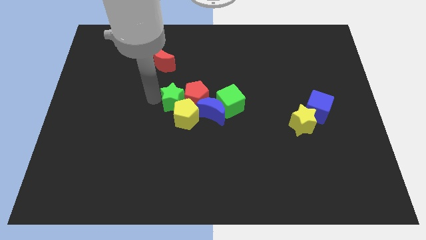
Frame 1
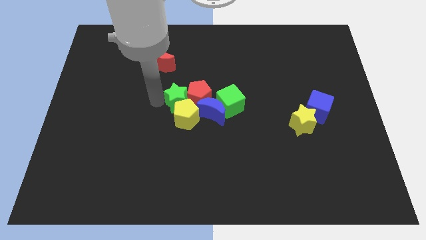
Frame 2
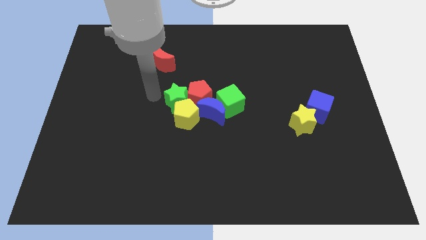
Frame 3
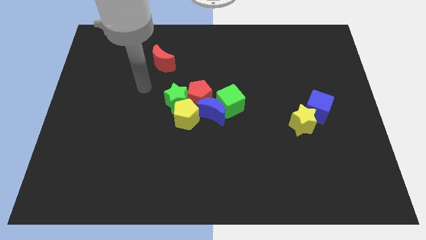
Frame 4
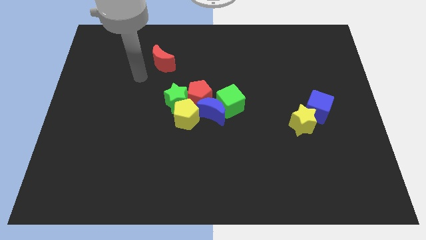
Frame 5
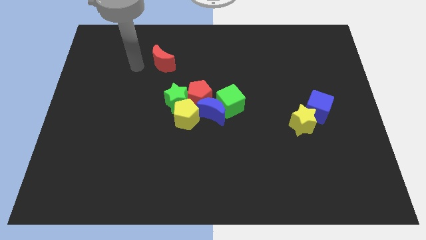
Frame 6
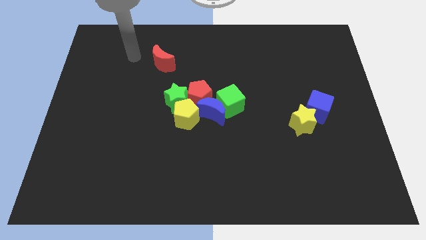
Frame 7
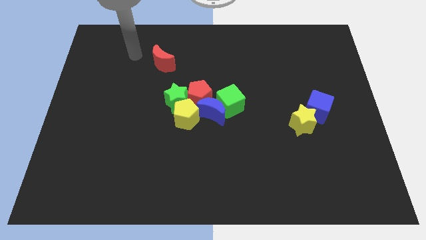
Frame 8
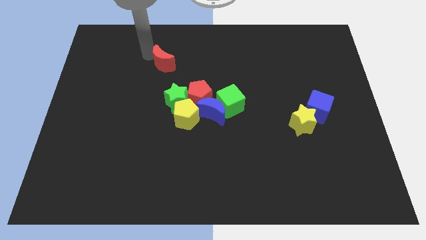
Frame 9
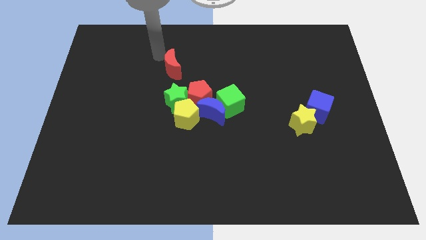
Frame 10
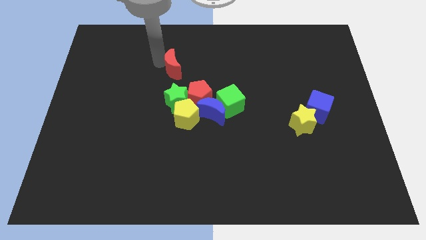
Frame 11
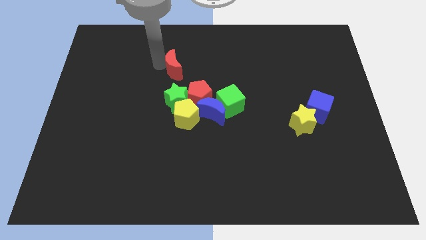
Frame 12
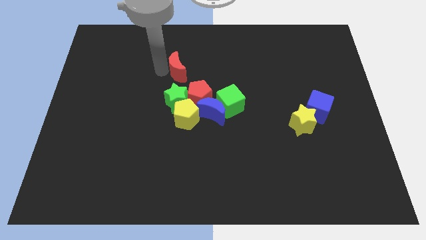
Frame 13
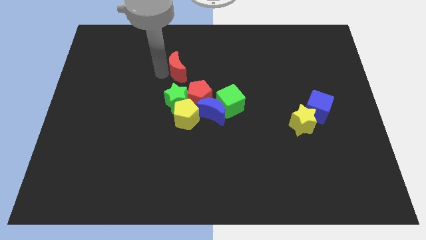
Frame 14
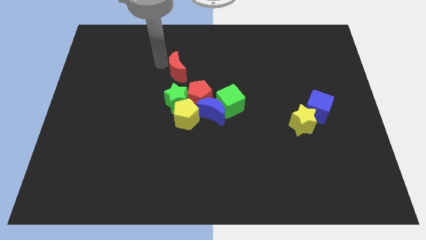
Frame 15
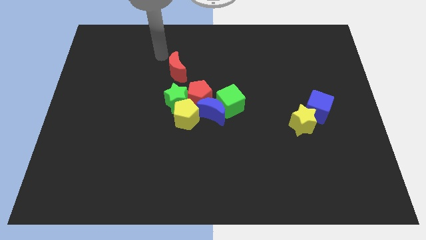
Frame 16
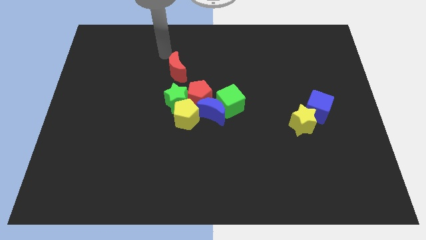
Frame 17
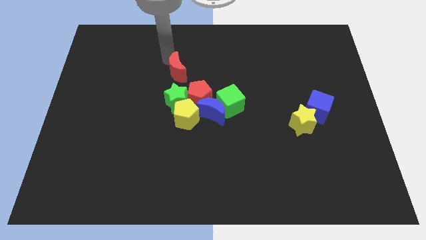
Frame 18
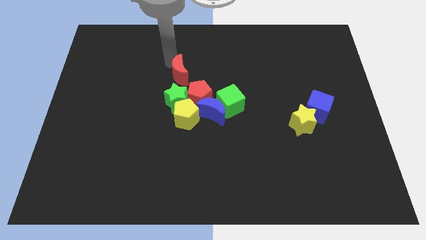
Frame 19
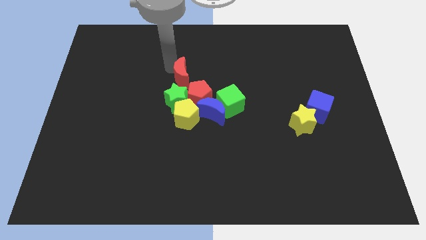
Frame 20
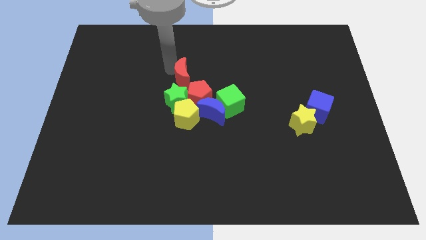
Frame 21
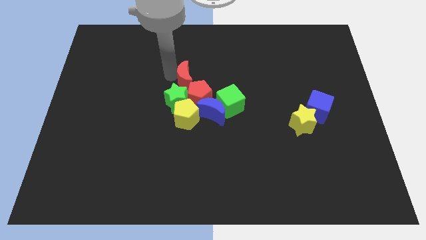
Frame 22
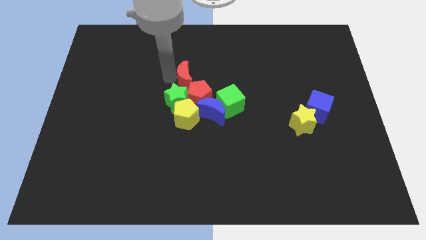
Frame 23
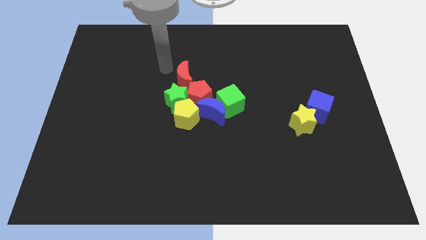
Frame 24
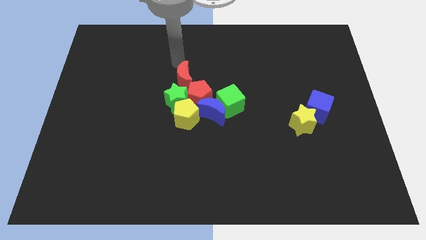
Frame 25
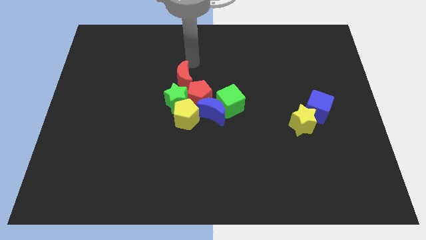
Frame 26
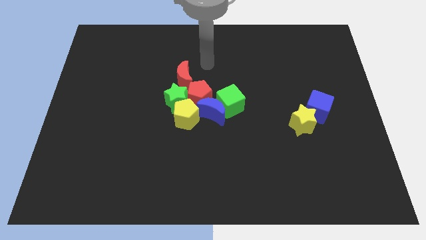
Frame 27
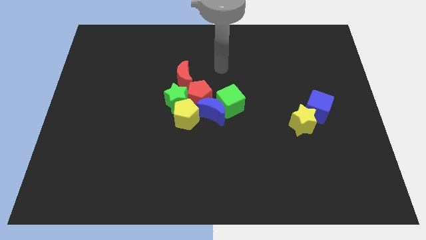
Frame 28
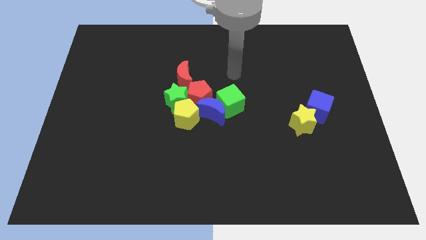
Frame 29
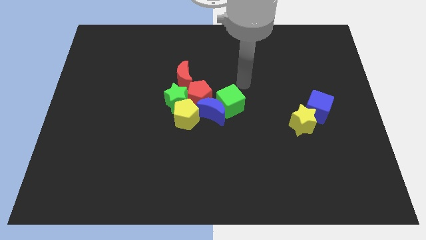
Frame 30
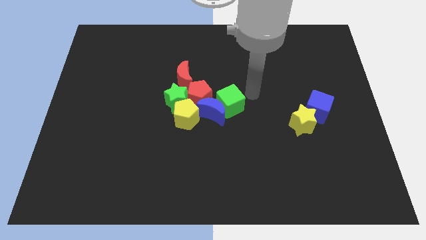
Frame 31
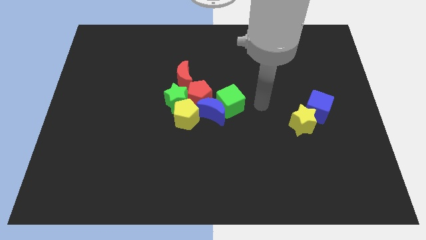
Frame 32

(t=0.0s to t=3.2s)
push the red crescent to the top of the red pentagon

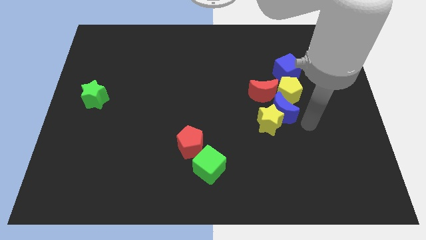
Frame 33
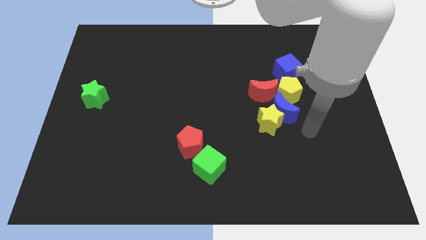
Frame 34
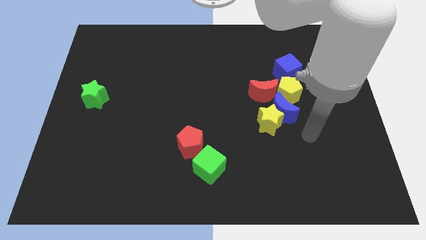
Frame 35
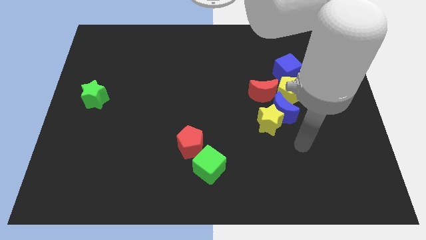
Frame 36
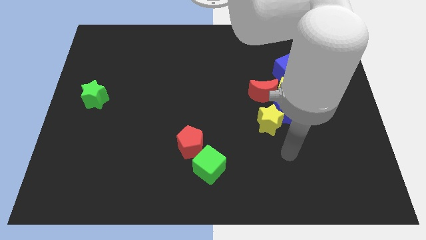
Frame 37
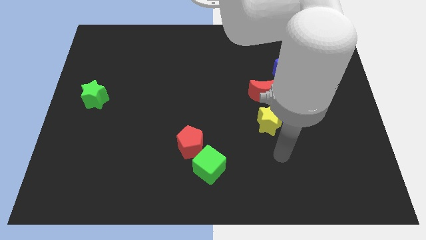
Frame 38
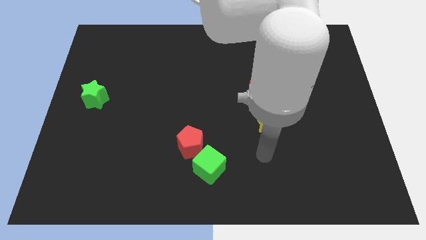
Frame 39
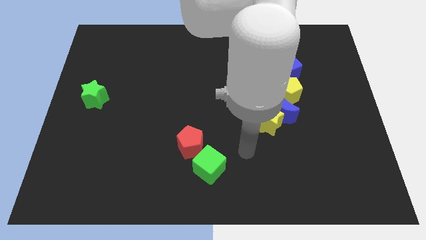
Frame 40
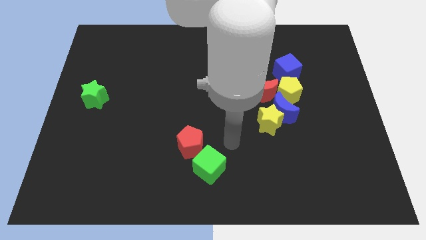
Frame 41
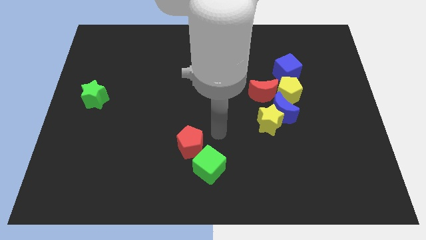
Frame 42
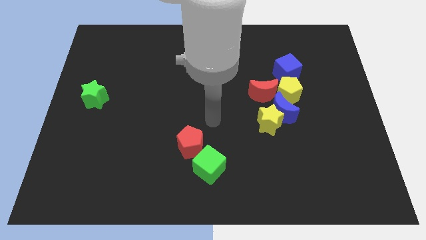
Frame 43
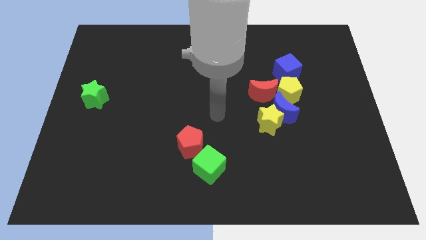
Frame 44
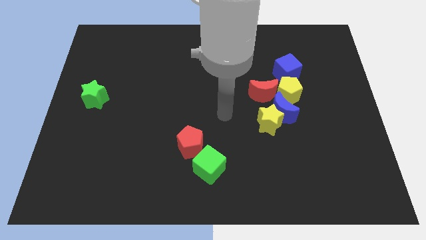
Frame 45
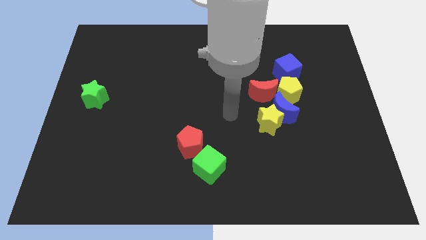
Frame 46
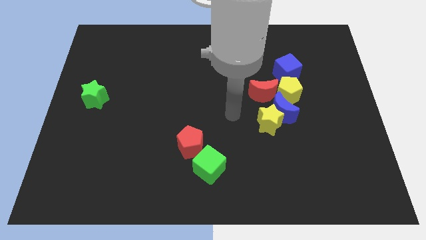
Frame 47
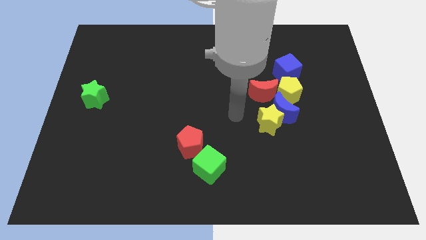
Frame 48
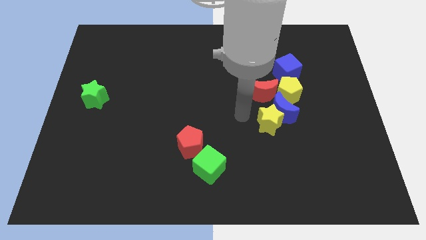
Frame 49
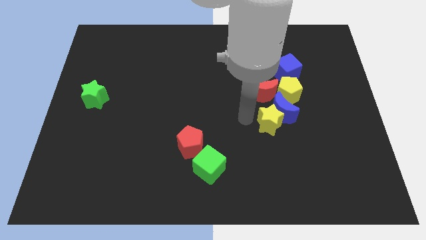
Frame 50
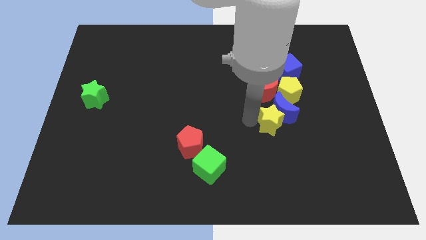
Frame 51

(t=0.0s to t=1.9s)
move your arm to the left of yellow star

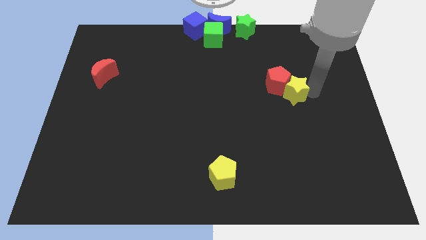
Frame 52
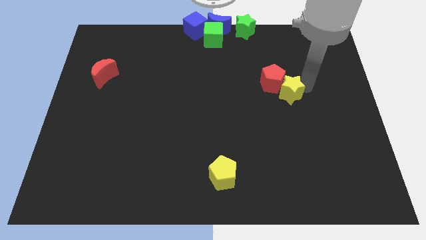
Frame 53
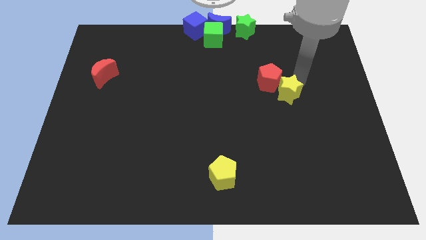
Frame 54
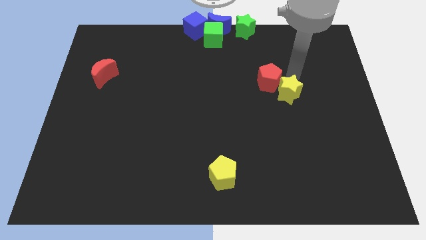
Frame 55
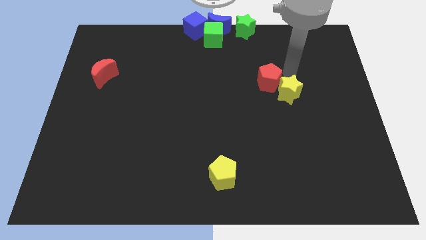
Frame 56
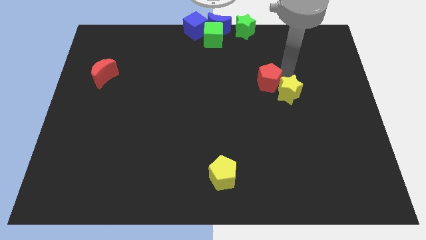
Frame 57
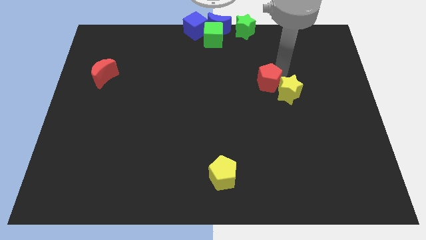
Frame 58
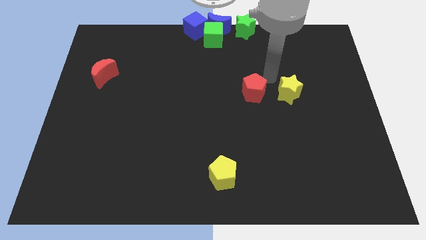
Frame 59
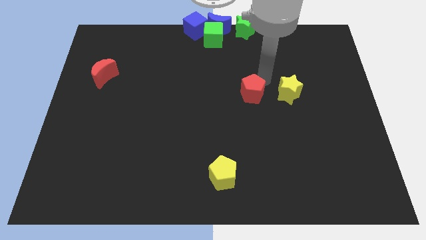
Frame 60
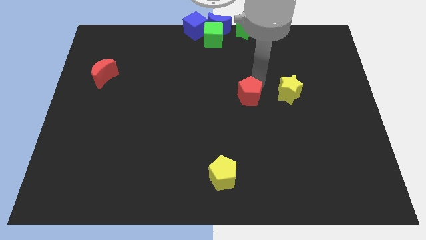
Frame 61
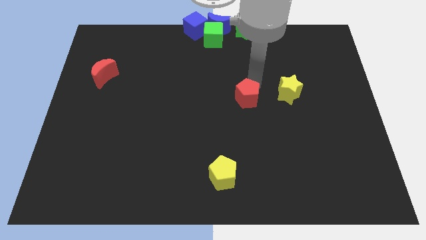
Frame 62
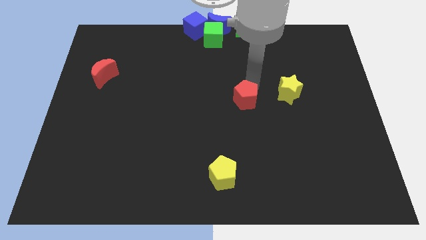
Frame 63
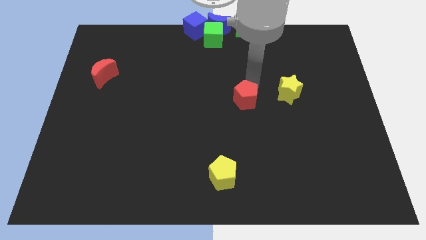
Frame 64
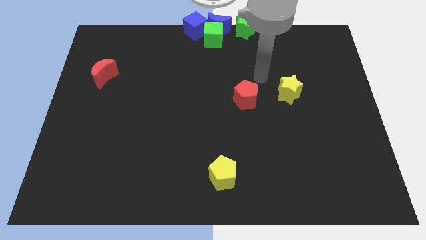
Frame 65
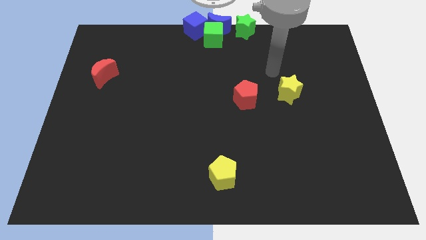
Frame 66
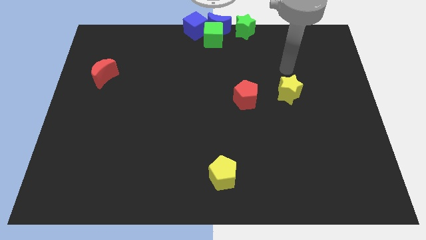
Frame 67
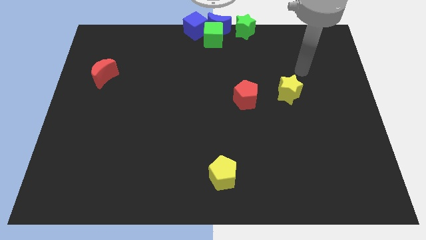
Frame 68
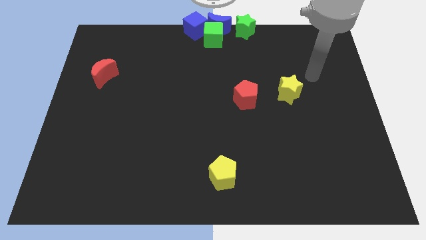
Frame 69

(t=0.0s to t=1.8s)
separate the red pentagon from the yellow star

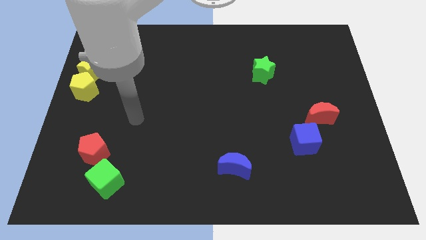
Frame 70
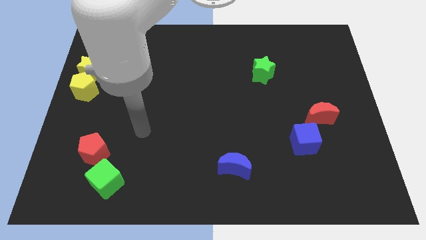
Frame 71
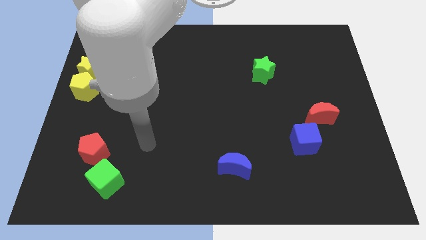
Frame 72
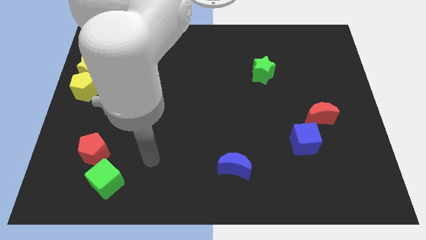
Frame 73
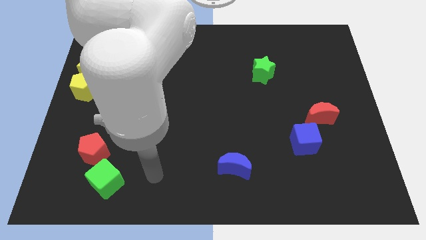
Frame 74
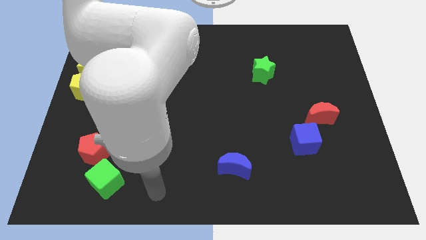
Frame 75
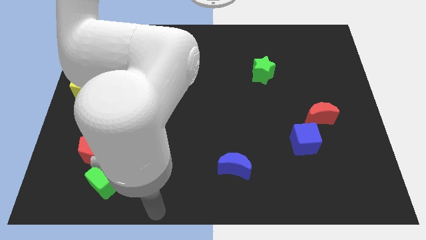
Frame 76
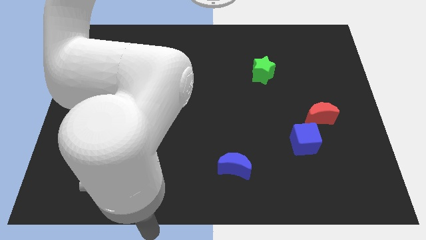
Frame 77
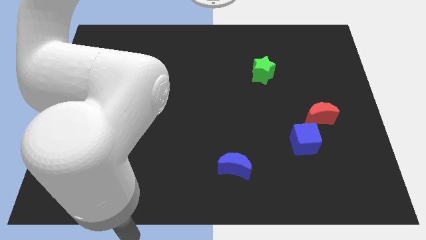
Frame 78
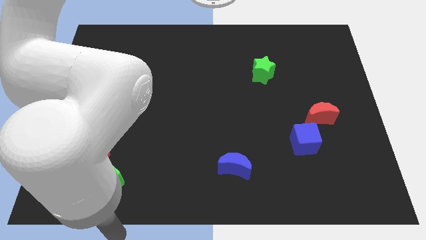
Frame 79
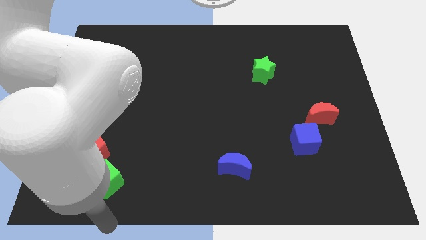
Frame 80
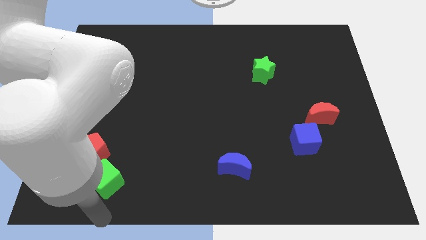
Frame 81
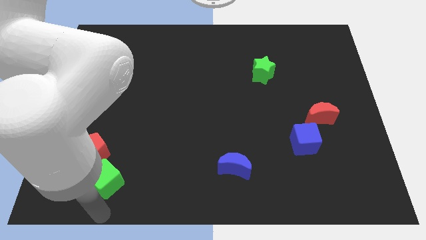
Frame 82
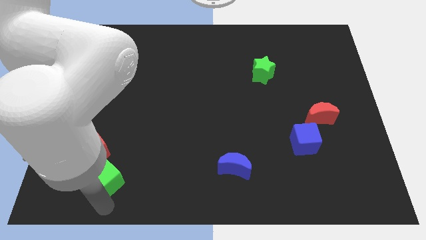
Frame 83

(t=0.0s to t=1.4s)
place the arm down to the green cube

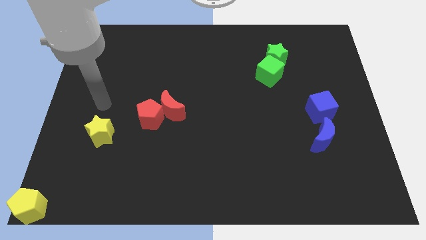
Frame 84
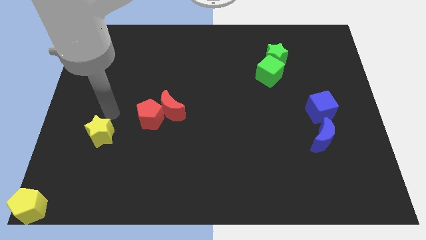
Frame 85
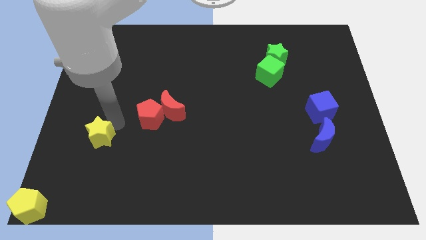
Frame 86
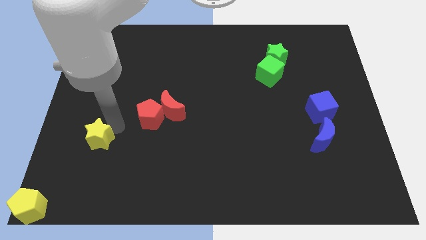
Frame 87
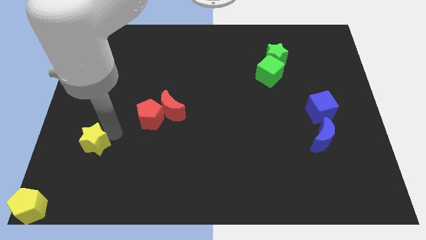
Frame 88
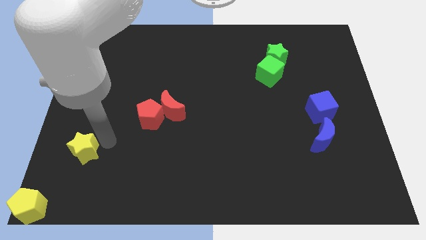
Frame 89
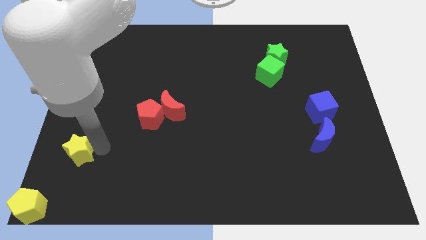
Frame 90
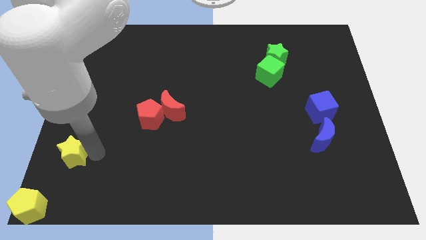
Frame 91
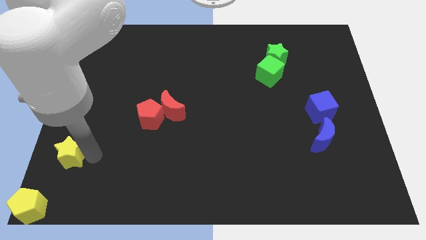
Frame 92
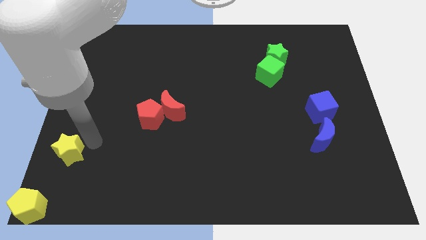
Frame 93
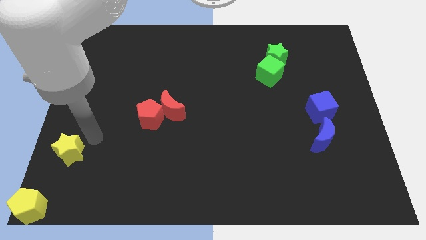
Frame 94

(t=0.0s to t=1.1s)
push the yellow star towards the bottom left corner
